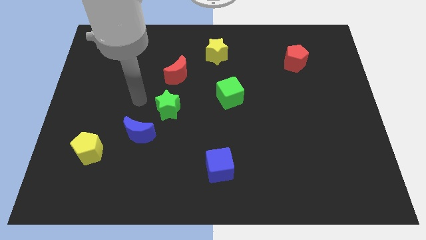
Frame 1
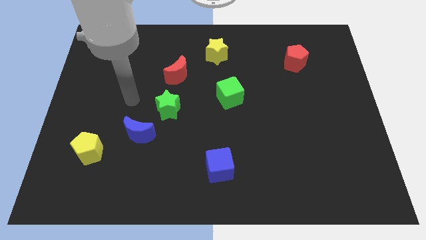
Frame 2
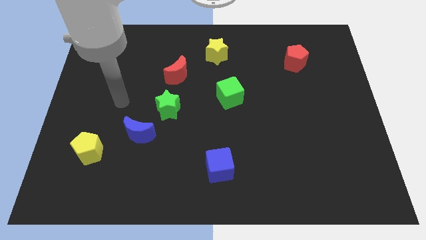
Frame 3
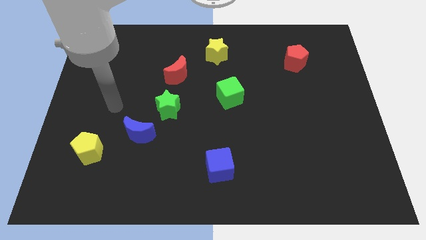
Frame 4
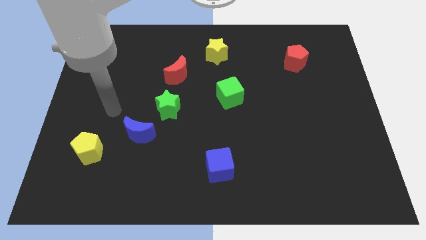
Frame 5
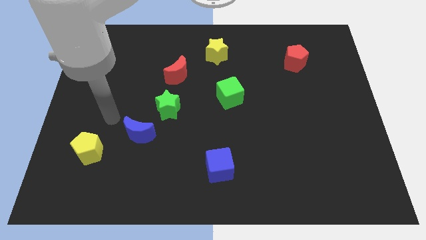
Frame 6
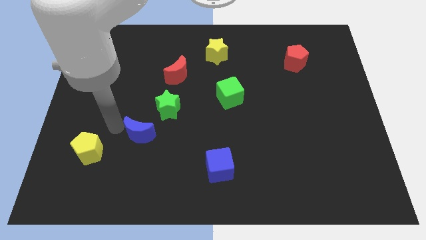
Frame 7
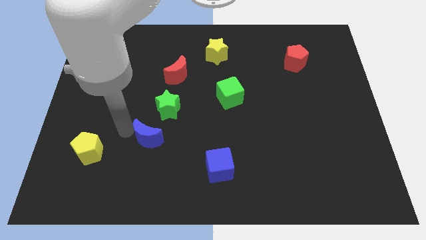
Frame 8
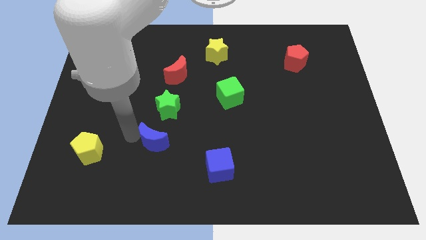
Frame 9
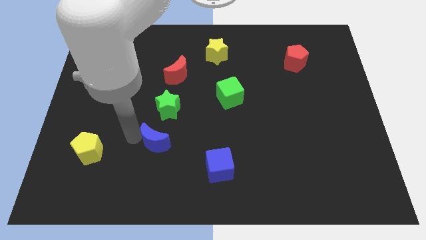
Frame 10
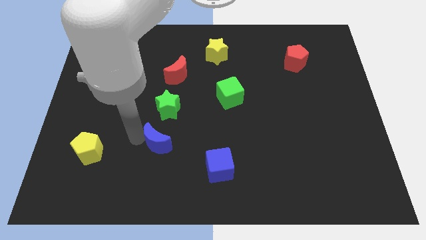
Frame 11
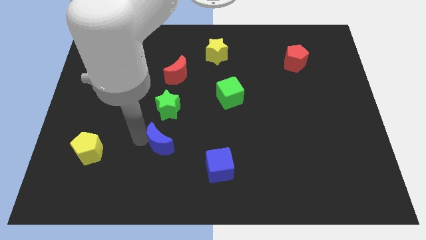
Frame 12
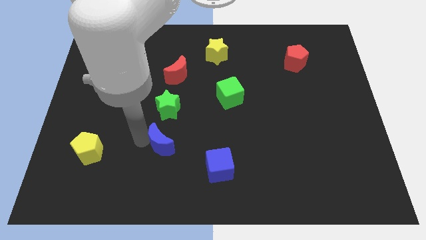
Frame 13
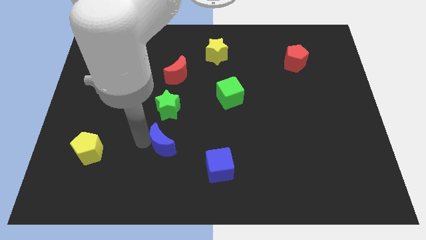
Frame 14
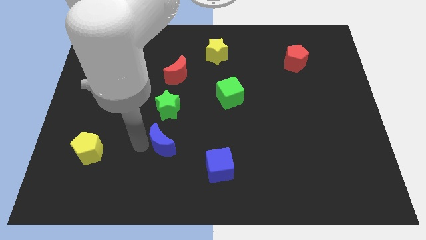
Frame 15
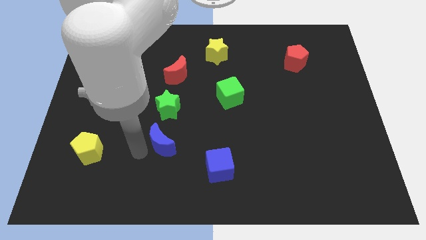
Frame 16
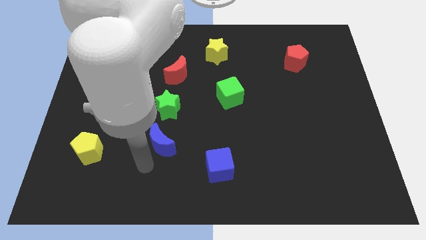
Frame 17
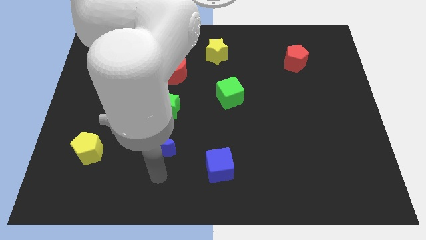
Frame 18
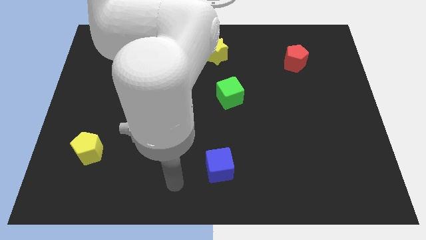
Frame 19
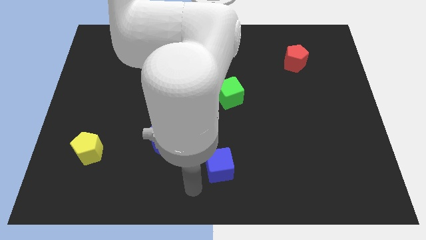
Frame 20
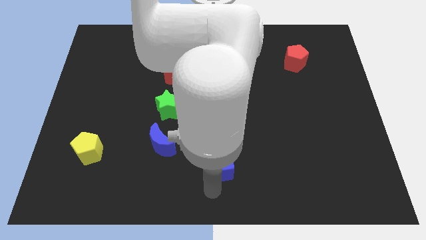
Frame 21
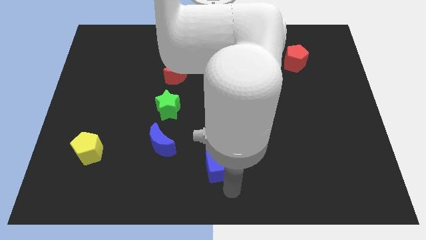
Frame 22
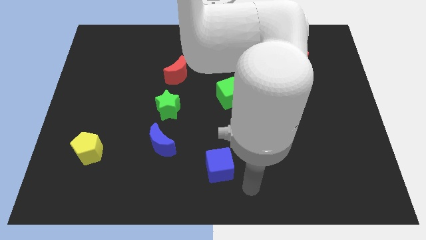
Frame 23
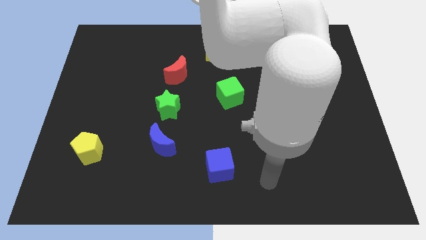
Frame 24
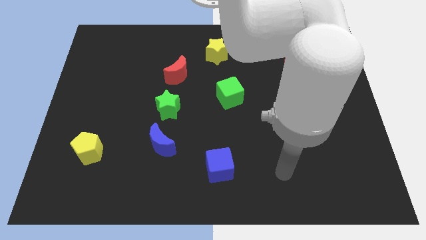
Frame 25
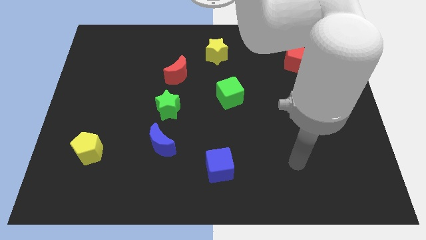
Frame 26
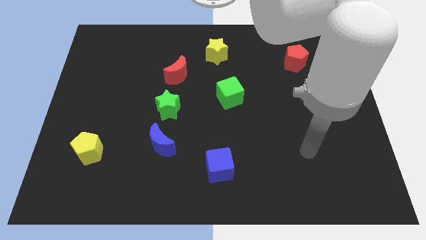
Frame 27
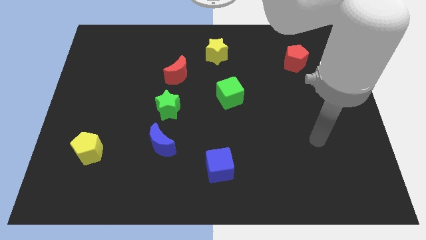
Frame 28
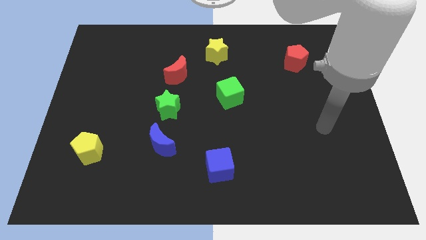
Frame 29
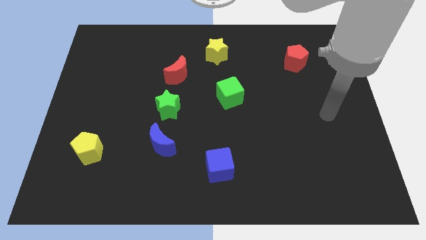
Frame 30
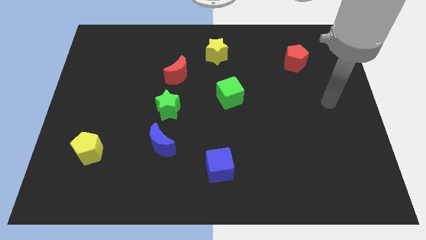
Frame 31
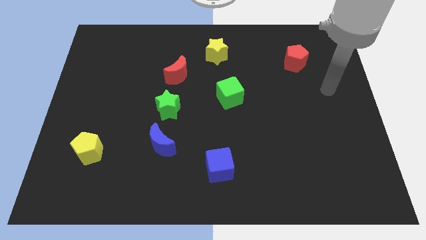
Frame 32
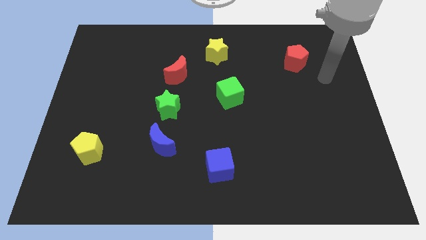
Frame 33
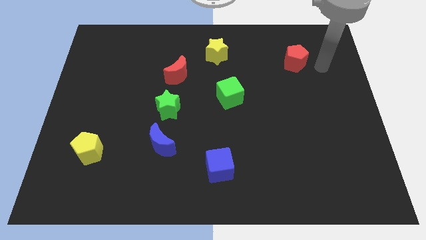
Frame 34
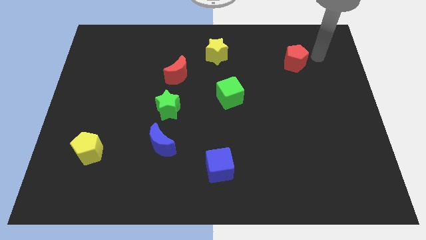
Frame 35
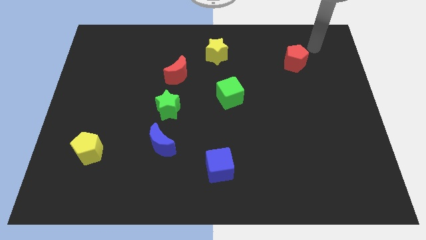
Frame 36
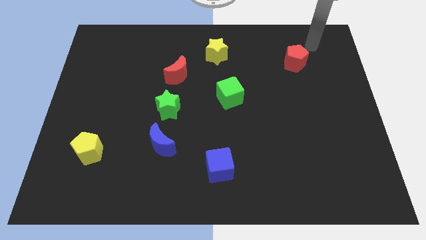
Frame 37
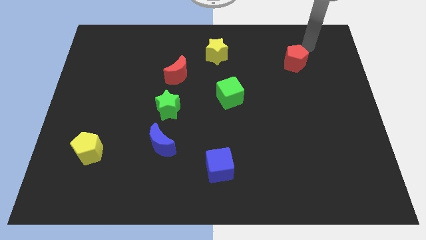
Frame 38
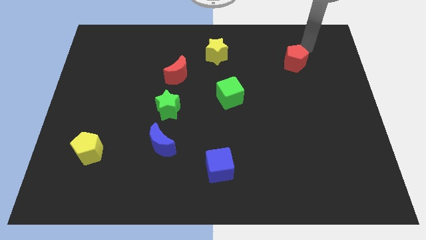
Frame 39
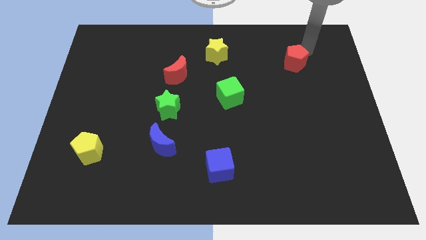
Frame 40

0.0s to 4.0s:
push the blue crescent diagonally on the top left side of the blue cube

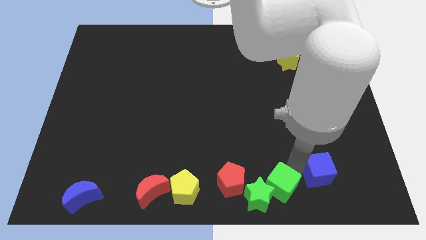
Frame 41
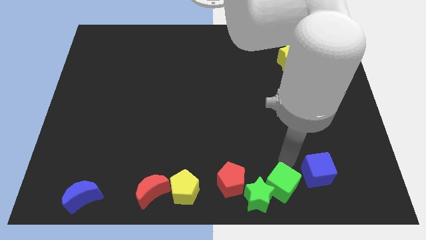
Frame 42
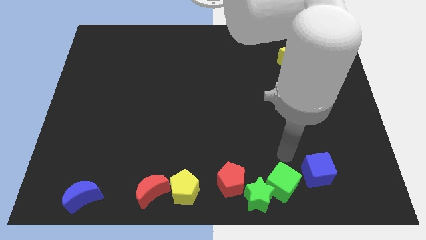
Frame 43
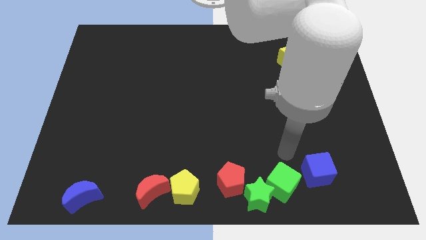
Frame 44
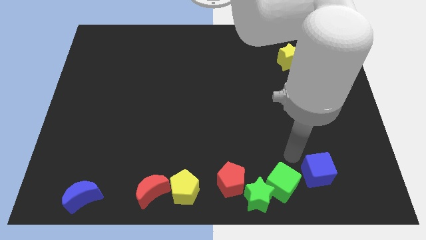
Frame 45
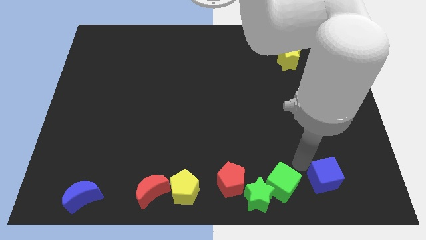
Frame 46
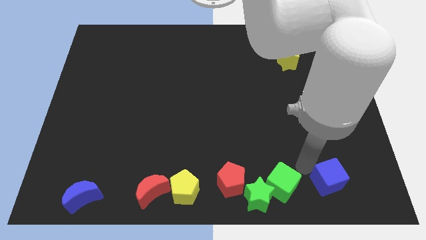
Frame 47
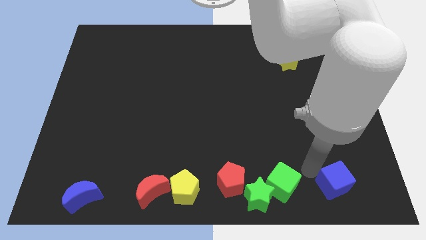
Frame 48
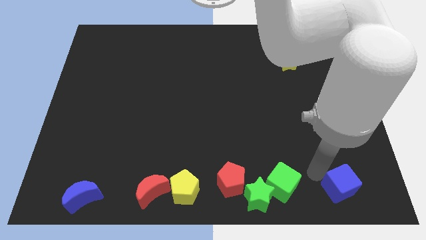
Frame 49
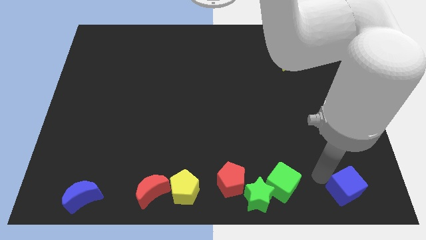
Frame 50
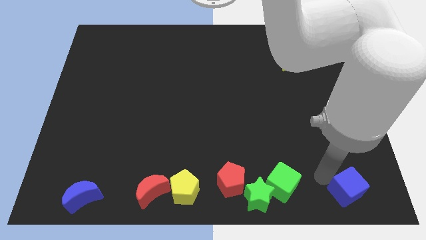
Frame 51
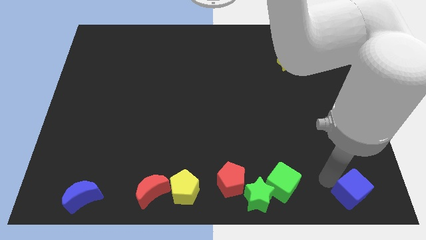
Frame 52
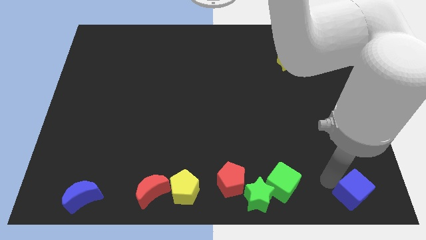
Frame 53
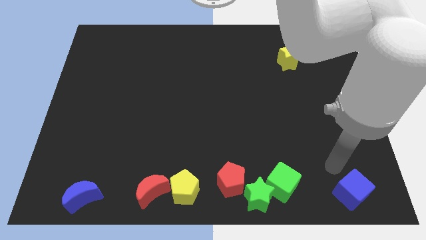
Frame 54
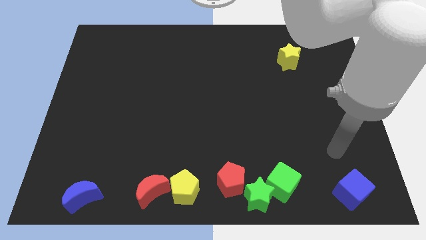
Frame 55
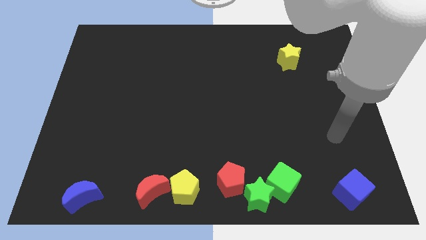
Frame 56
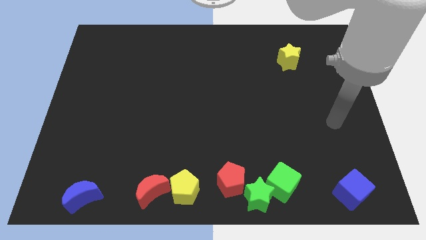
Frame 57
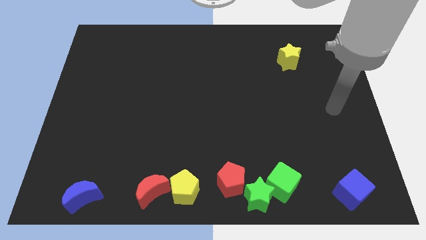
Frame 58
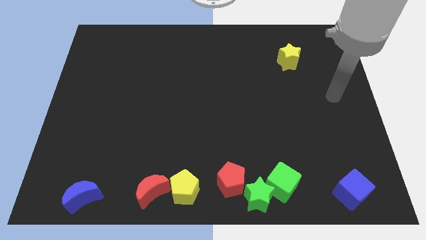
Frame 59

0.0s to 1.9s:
push the blue square to the bottom right side

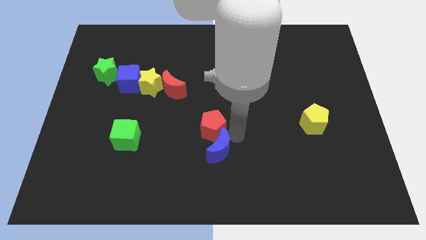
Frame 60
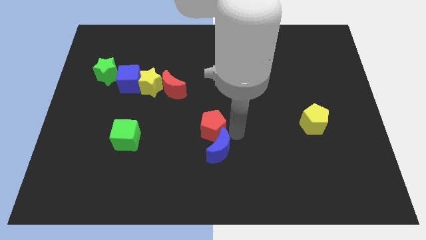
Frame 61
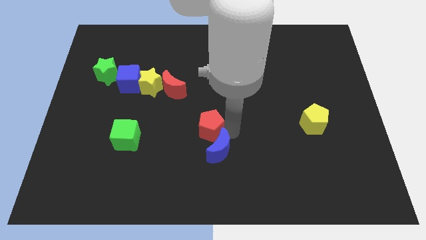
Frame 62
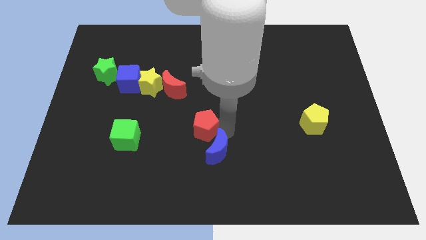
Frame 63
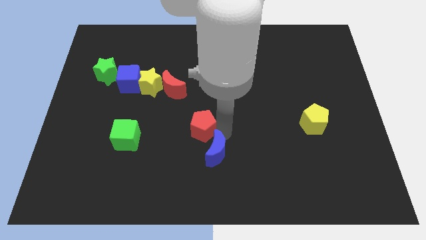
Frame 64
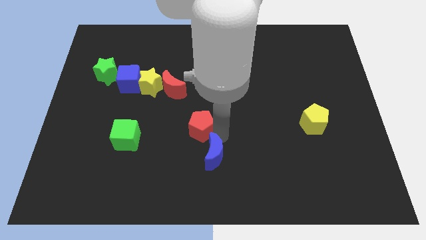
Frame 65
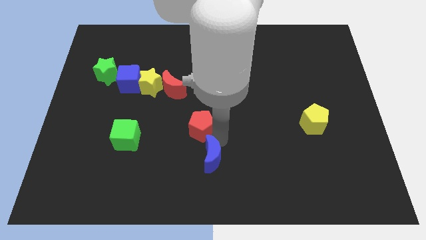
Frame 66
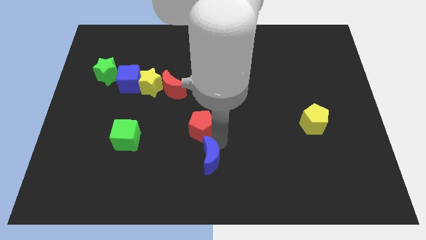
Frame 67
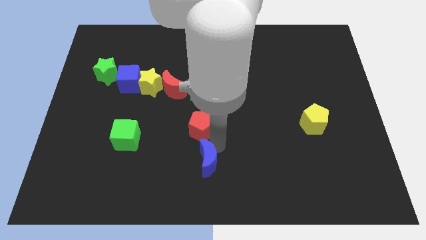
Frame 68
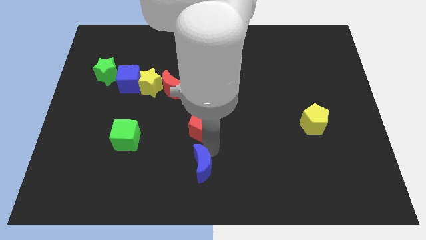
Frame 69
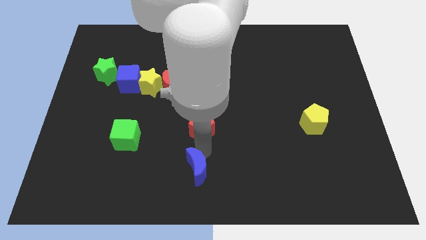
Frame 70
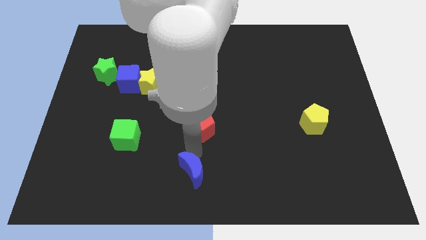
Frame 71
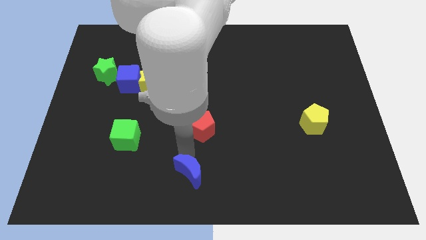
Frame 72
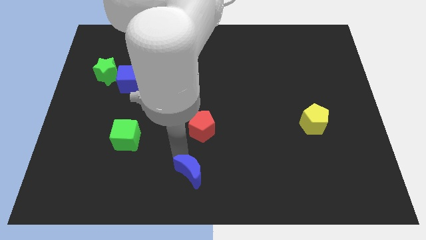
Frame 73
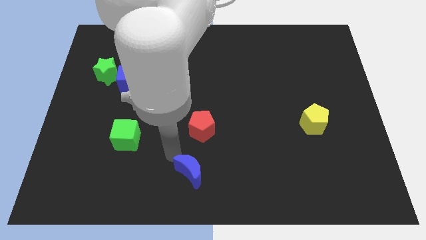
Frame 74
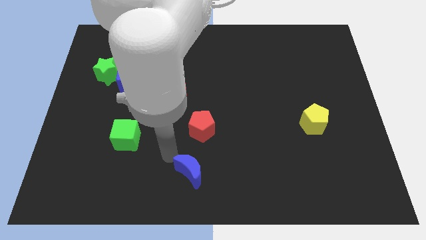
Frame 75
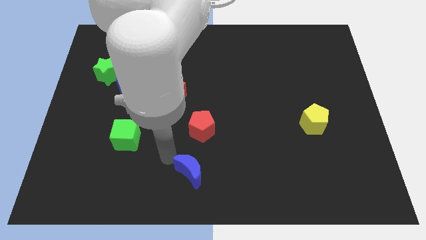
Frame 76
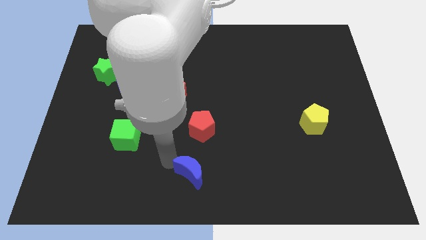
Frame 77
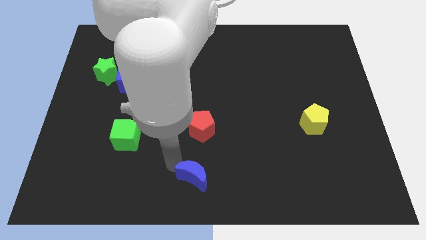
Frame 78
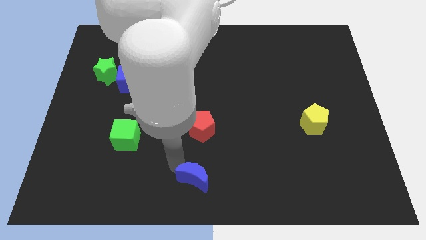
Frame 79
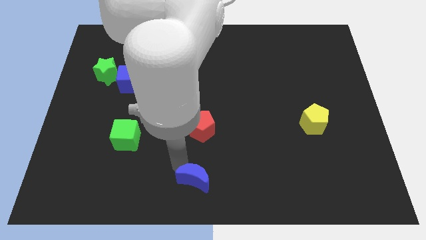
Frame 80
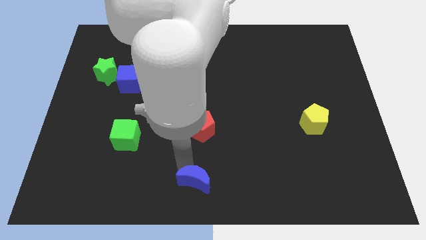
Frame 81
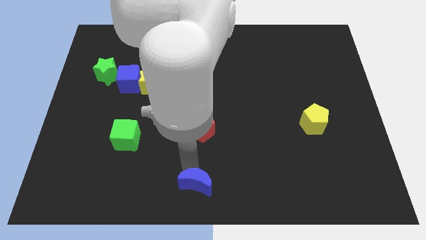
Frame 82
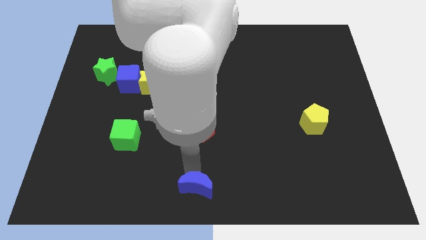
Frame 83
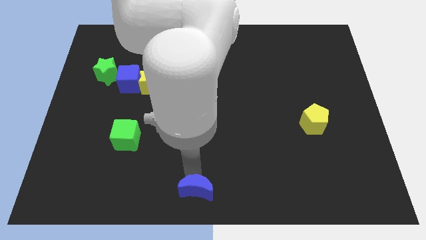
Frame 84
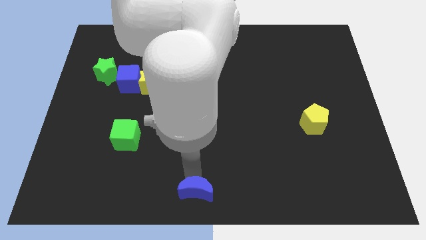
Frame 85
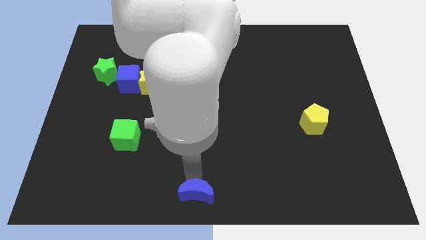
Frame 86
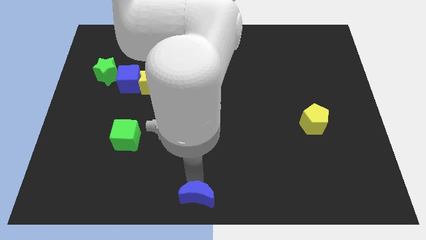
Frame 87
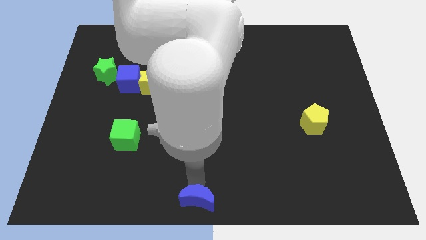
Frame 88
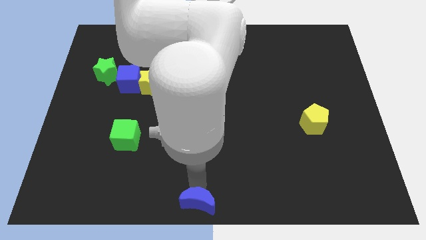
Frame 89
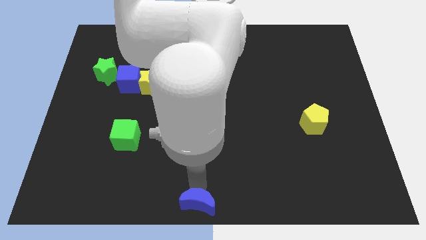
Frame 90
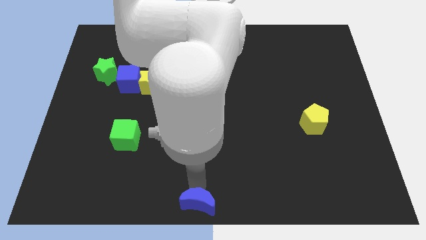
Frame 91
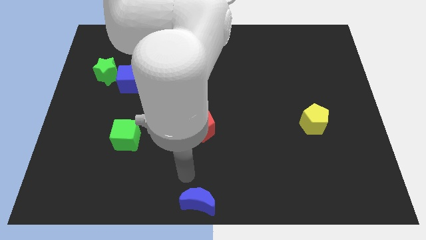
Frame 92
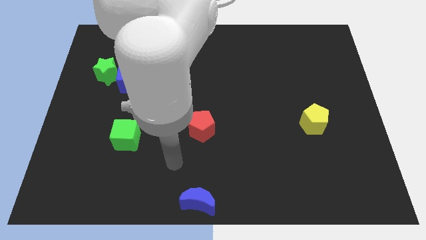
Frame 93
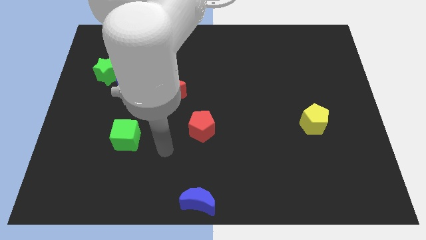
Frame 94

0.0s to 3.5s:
push the blue moon to the bottom center of the board
